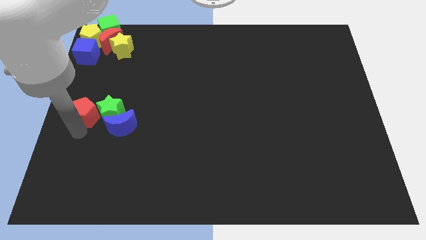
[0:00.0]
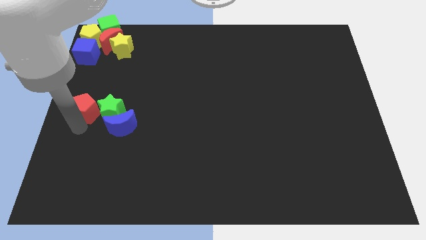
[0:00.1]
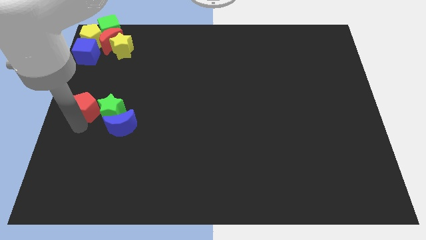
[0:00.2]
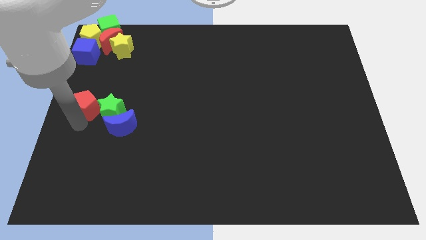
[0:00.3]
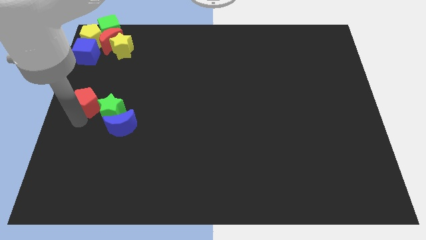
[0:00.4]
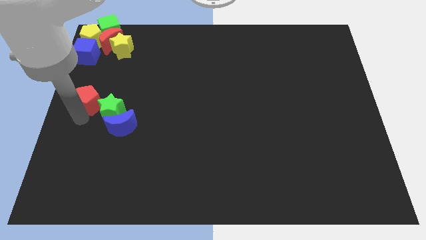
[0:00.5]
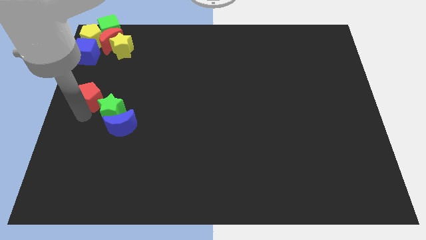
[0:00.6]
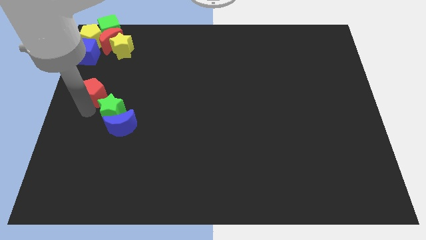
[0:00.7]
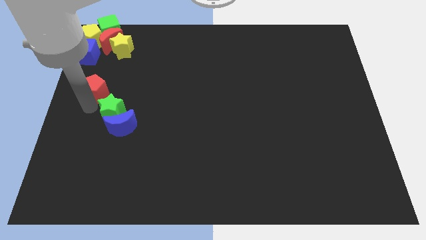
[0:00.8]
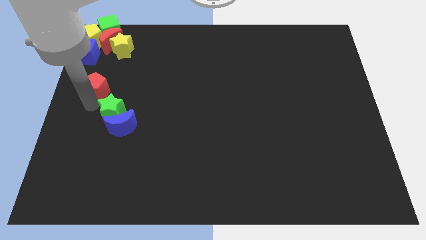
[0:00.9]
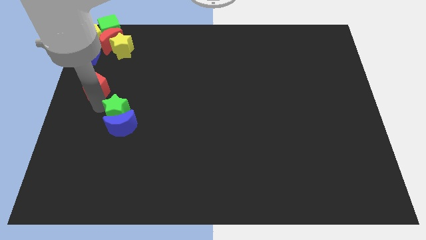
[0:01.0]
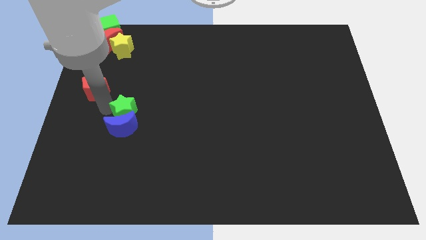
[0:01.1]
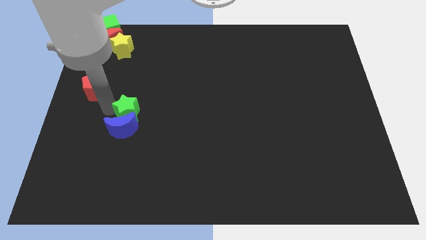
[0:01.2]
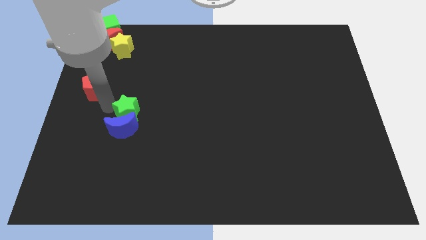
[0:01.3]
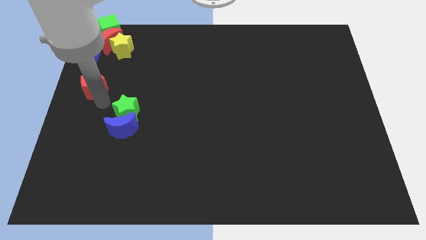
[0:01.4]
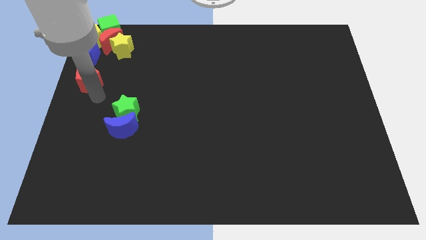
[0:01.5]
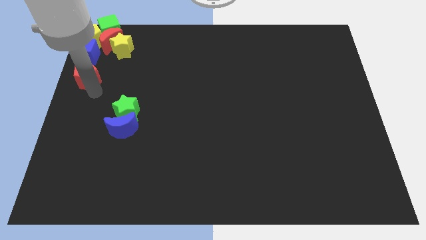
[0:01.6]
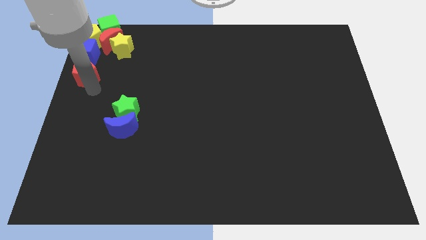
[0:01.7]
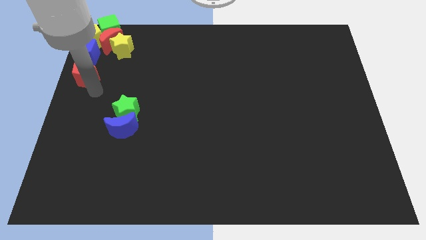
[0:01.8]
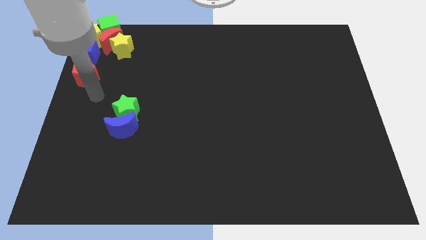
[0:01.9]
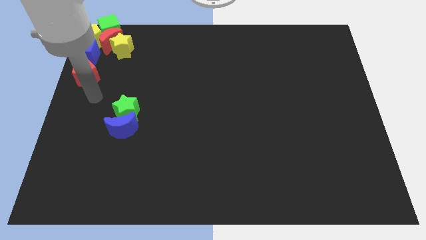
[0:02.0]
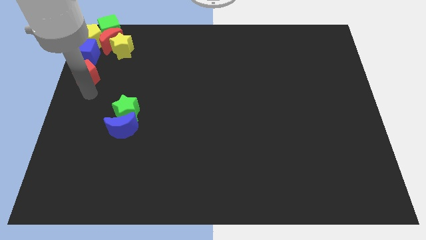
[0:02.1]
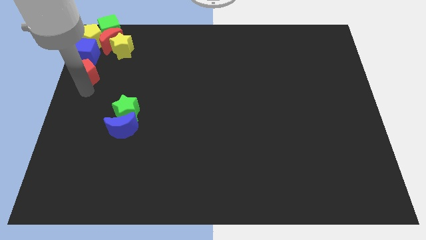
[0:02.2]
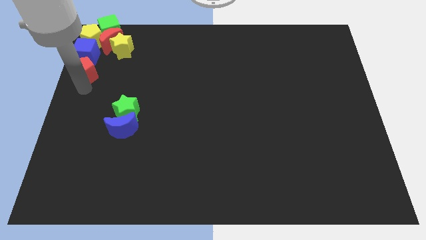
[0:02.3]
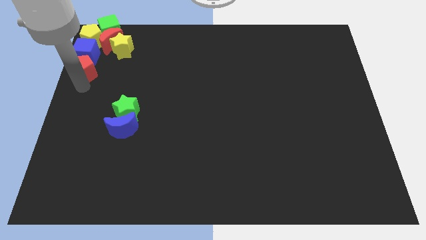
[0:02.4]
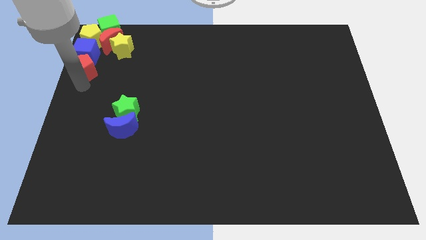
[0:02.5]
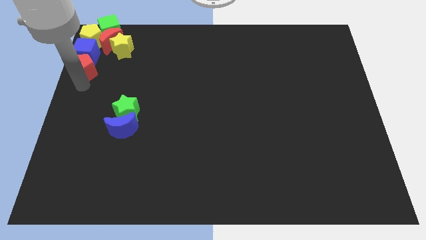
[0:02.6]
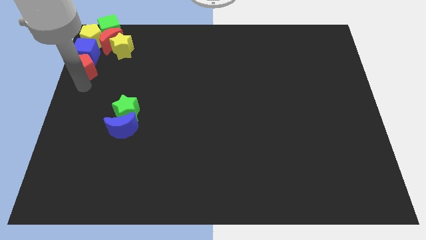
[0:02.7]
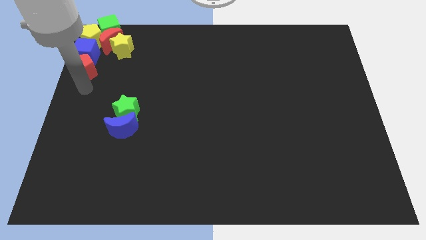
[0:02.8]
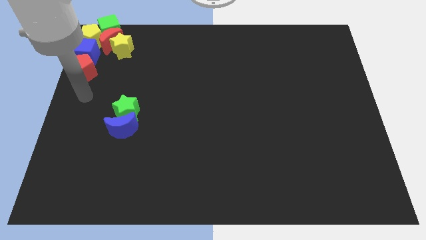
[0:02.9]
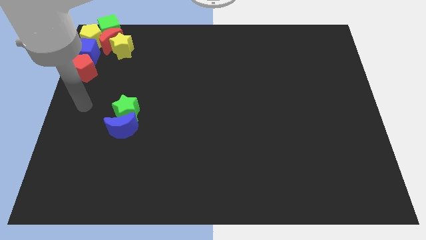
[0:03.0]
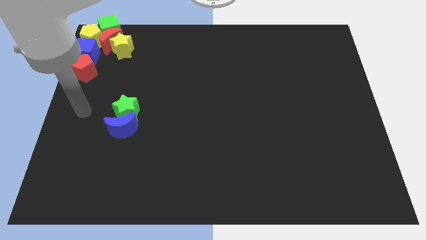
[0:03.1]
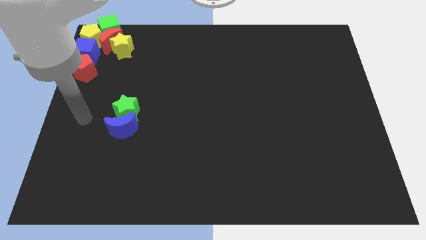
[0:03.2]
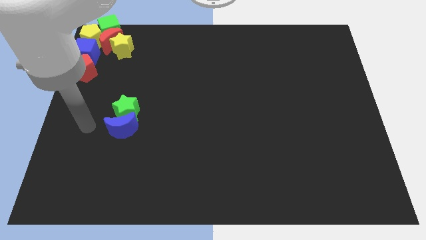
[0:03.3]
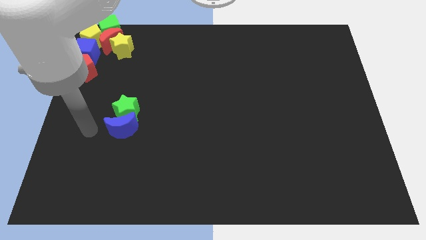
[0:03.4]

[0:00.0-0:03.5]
push the red pentagon under blue cube

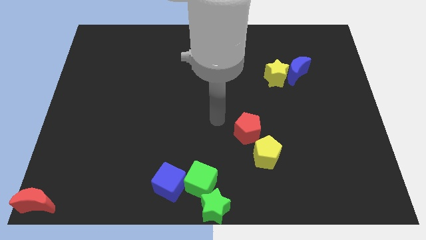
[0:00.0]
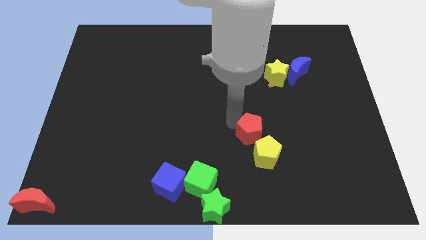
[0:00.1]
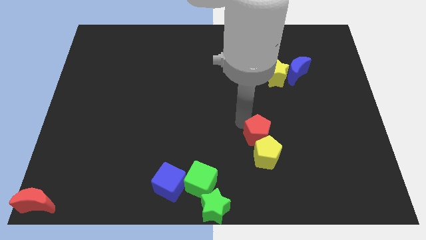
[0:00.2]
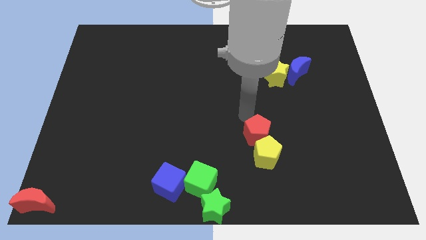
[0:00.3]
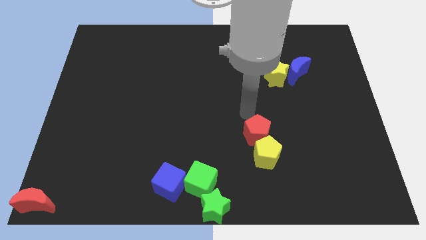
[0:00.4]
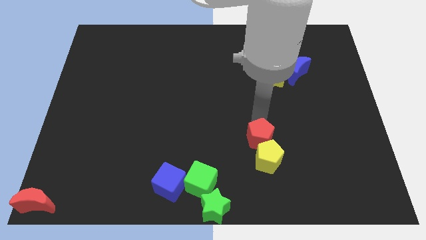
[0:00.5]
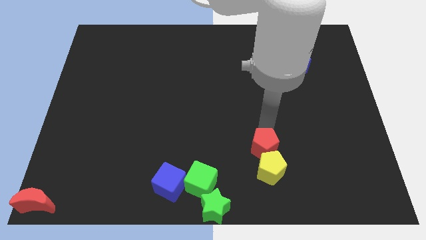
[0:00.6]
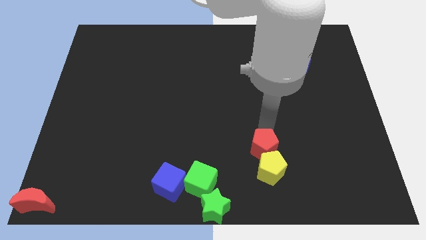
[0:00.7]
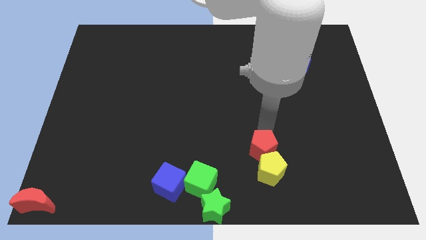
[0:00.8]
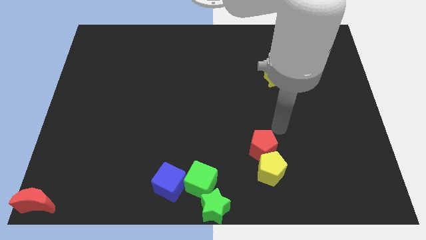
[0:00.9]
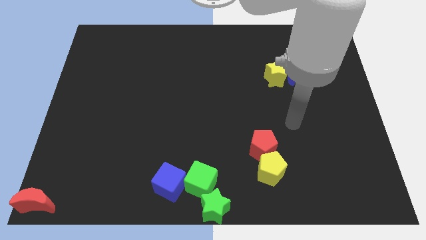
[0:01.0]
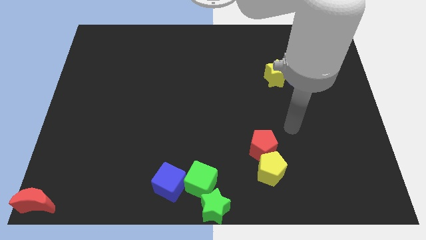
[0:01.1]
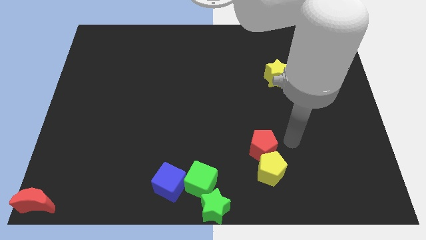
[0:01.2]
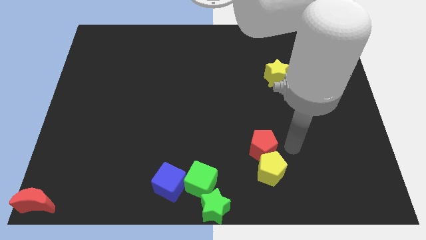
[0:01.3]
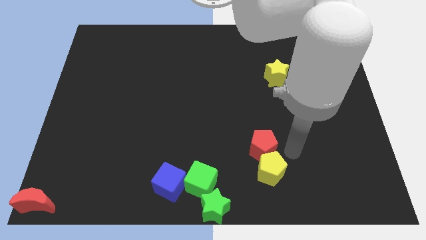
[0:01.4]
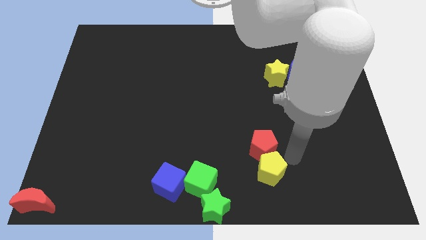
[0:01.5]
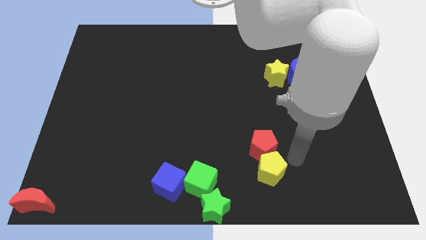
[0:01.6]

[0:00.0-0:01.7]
move the red pentagon above the another pentagon

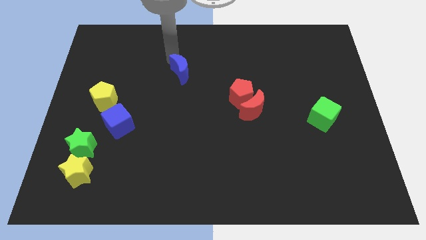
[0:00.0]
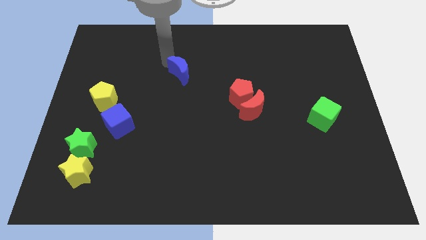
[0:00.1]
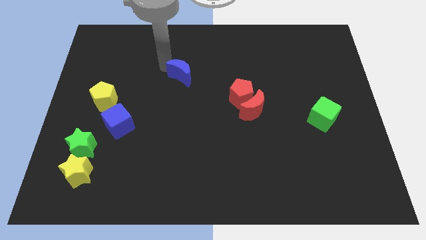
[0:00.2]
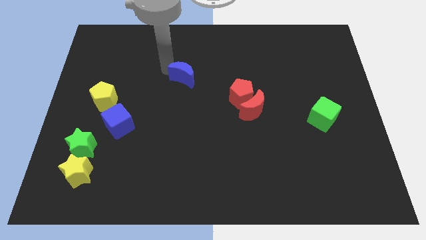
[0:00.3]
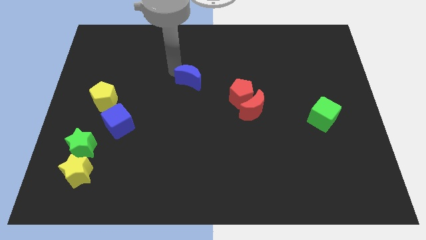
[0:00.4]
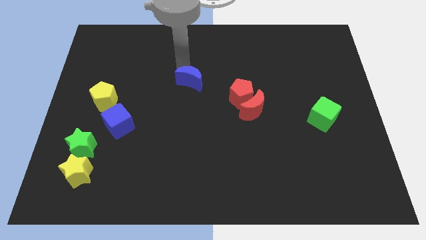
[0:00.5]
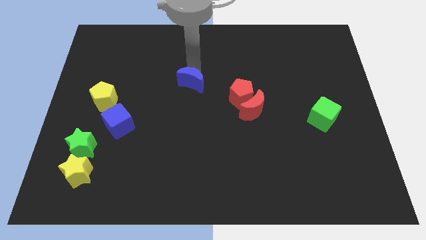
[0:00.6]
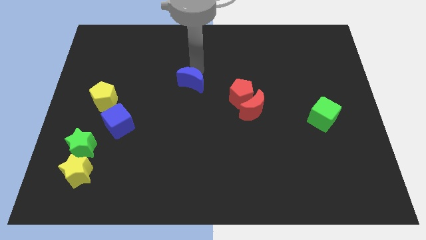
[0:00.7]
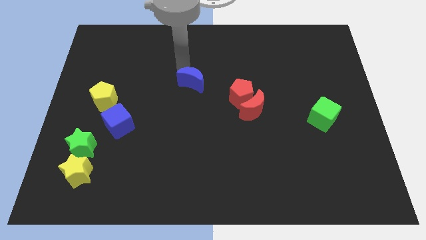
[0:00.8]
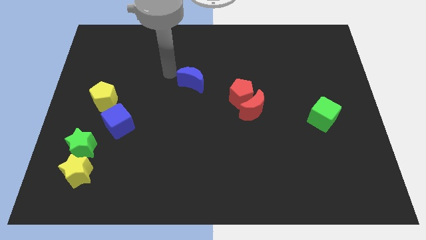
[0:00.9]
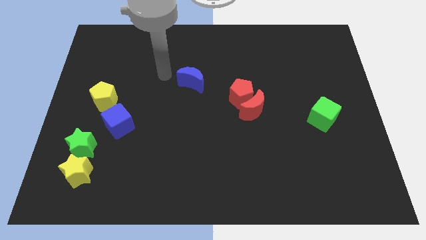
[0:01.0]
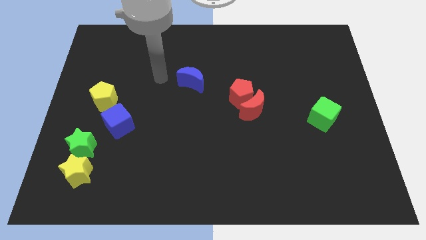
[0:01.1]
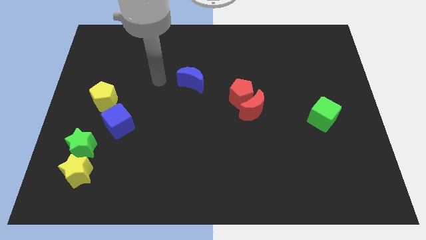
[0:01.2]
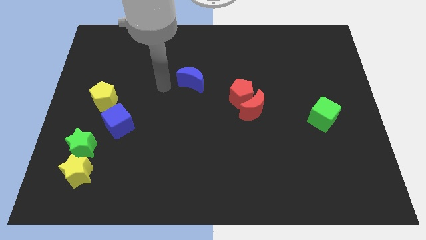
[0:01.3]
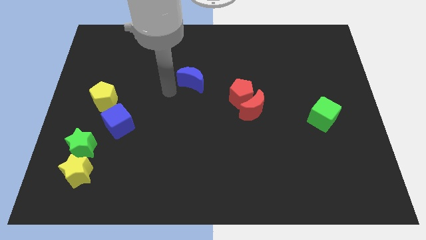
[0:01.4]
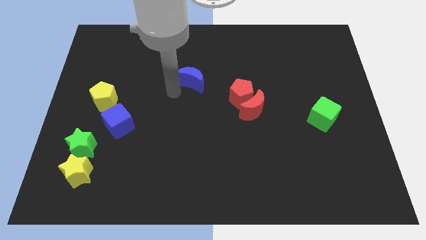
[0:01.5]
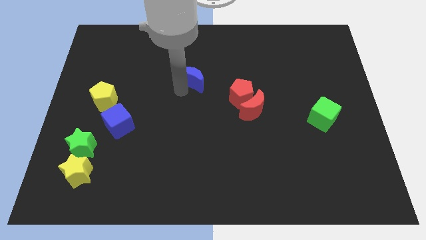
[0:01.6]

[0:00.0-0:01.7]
push the blue crescent towards the left of the red pentagon

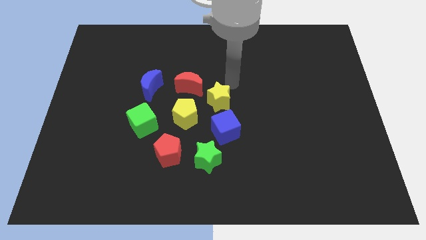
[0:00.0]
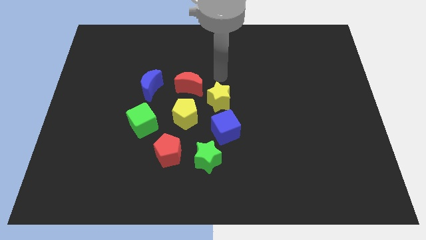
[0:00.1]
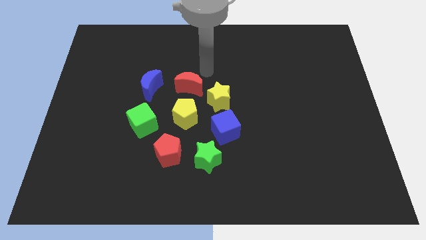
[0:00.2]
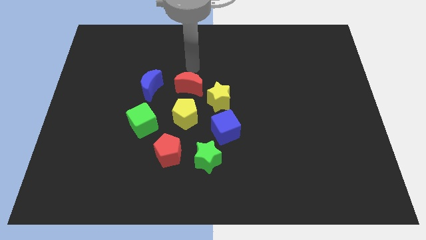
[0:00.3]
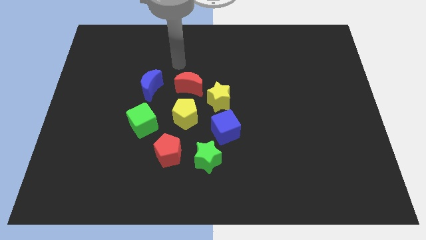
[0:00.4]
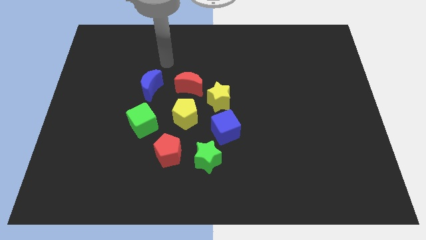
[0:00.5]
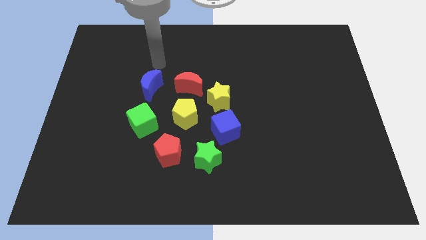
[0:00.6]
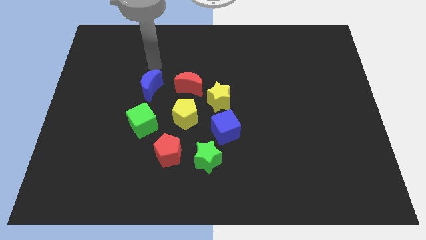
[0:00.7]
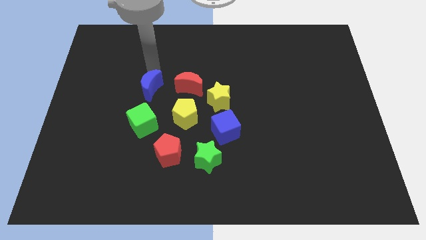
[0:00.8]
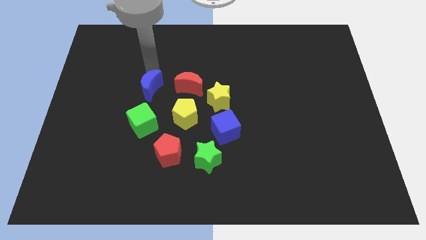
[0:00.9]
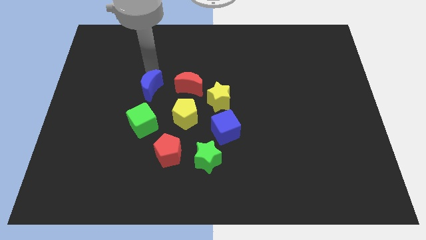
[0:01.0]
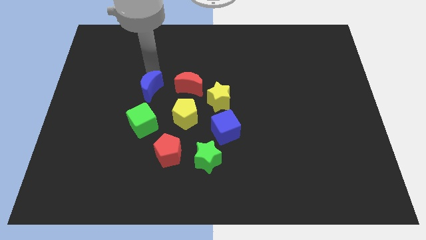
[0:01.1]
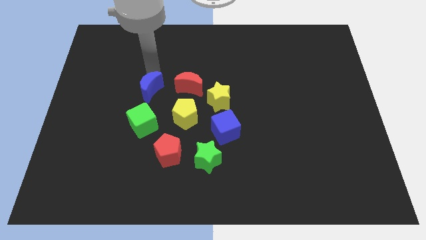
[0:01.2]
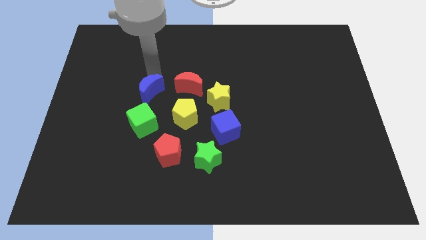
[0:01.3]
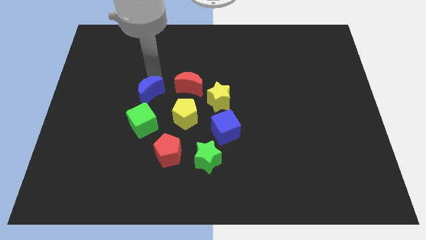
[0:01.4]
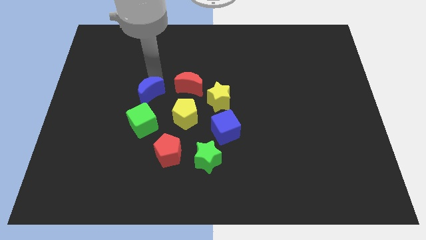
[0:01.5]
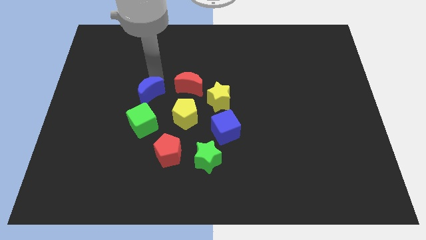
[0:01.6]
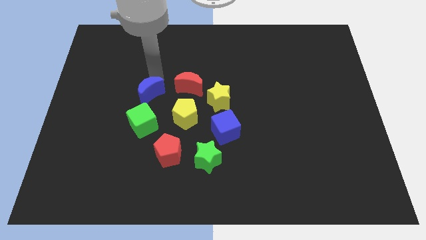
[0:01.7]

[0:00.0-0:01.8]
push the blue crescent slightly towards down
